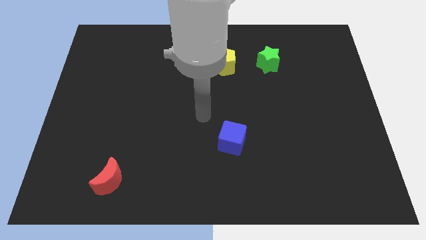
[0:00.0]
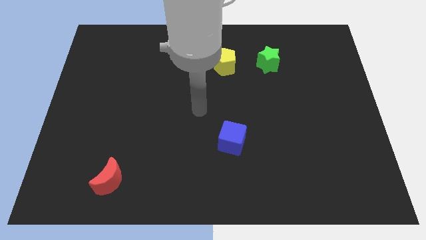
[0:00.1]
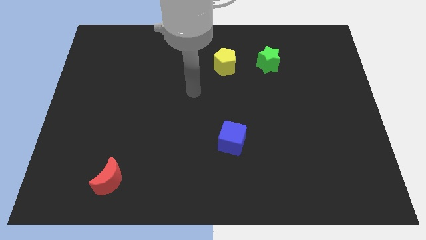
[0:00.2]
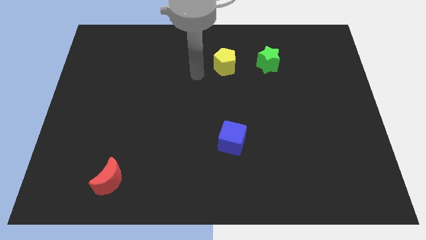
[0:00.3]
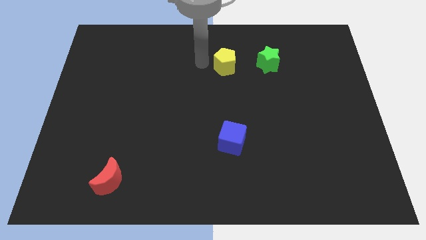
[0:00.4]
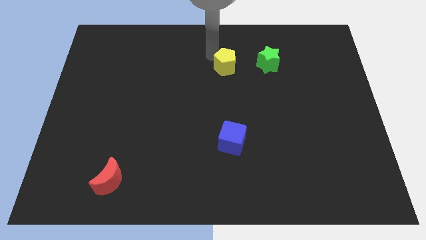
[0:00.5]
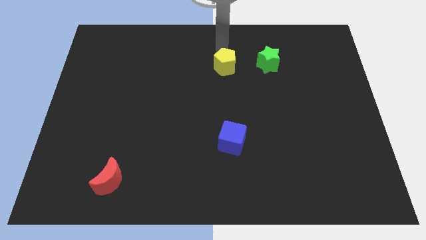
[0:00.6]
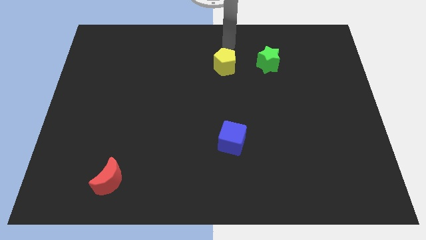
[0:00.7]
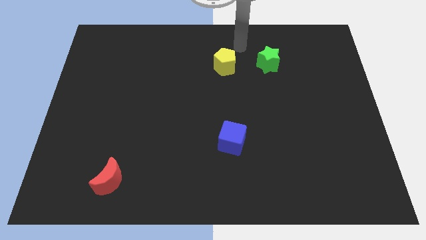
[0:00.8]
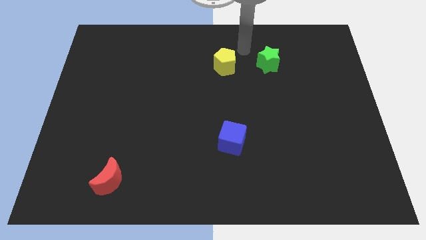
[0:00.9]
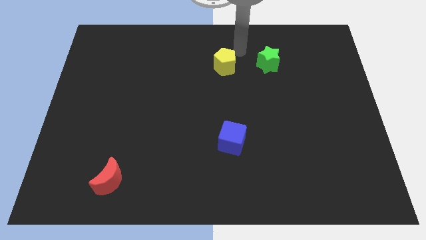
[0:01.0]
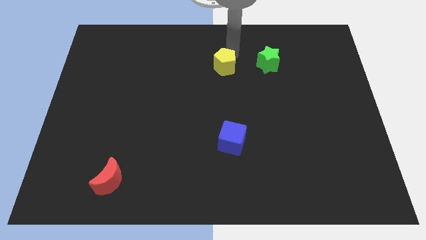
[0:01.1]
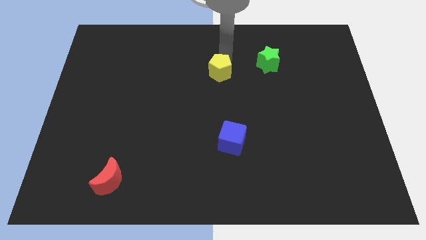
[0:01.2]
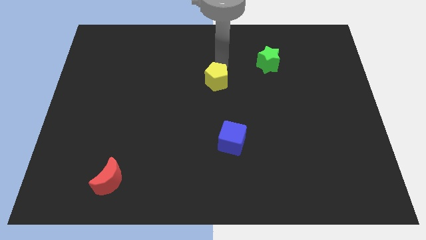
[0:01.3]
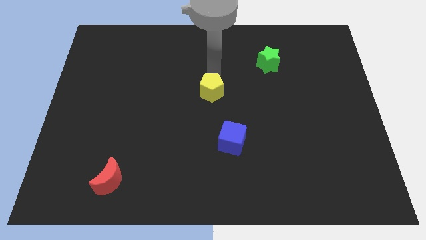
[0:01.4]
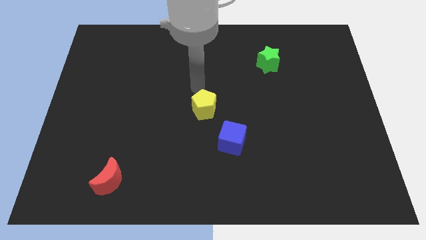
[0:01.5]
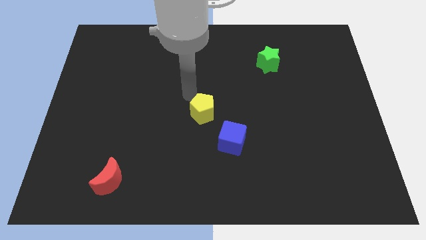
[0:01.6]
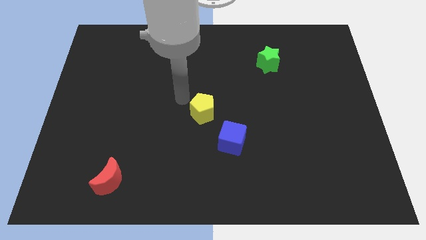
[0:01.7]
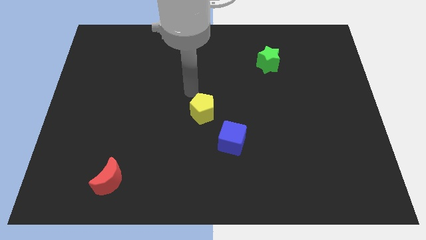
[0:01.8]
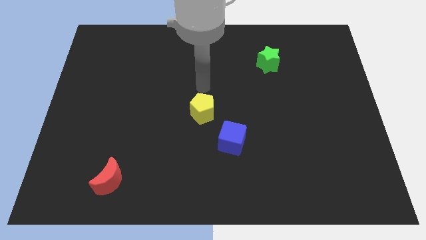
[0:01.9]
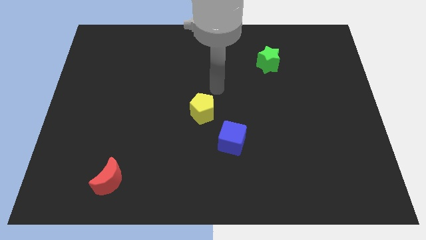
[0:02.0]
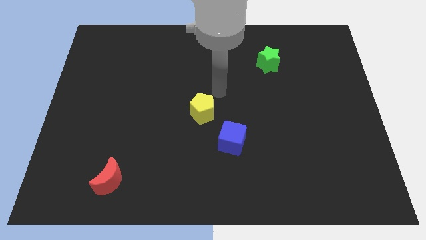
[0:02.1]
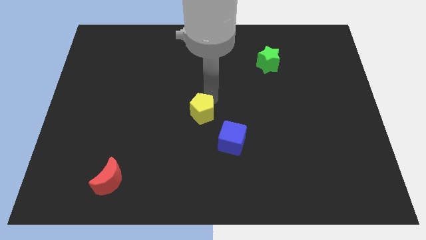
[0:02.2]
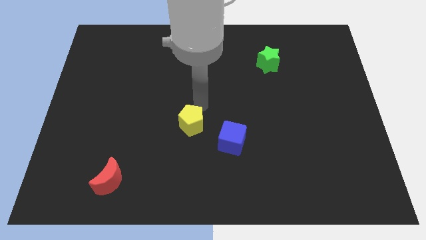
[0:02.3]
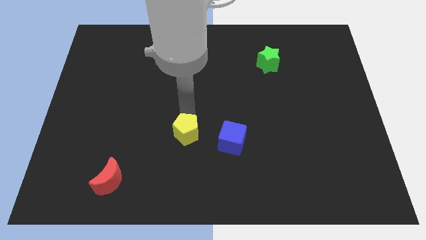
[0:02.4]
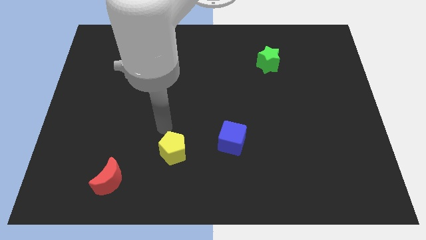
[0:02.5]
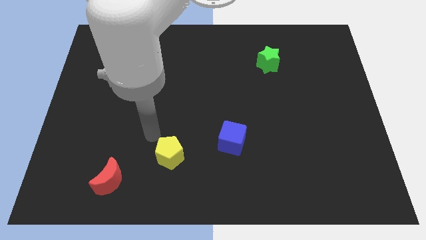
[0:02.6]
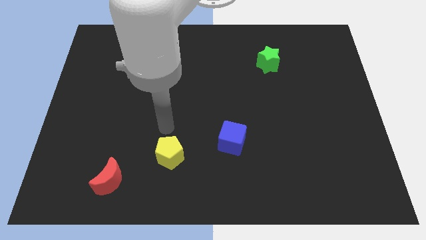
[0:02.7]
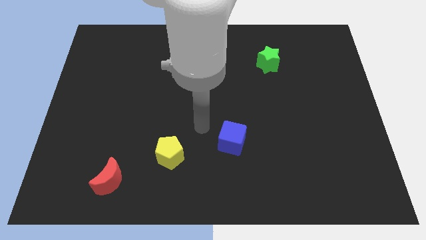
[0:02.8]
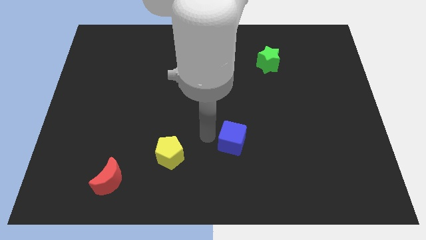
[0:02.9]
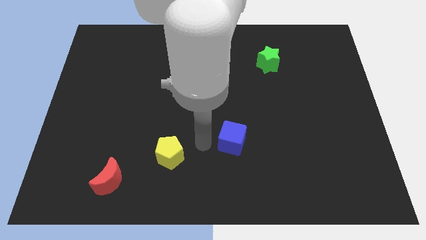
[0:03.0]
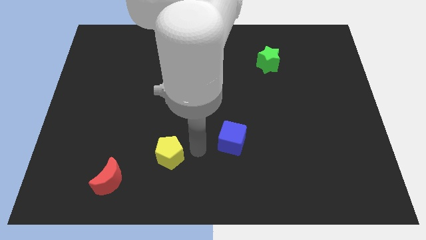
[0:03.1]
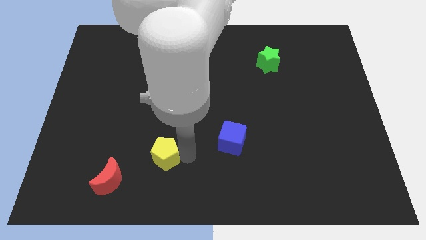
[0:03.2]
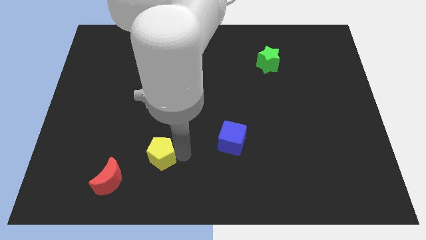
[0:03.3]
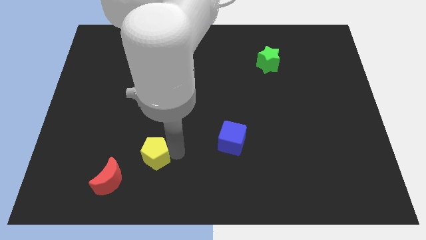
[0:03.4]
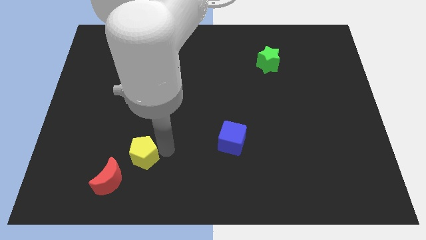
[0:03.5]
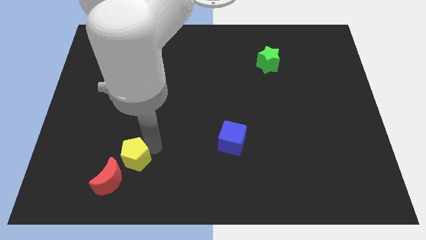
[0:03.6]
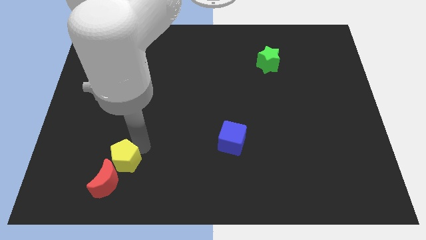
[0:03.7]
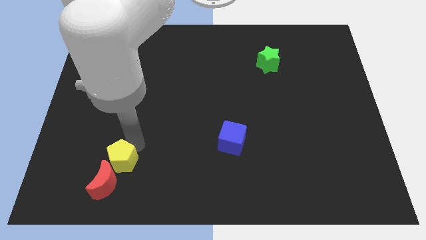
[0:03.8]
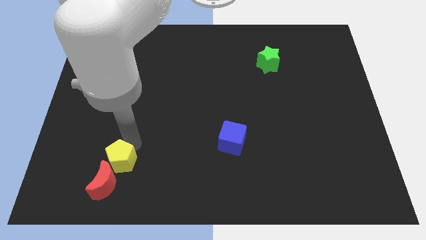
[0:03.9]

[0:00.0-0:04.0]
move the pentagon next to the red moon

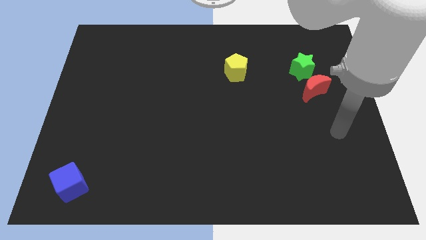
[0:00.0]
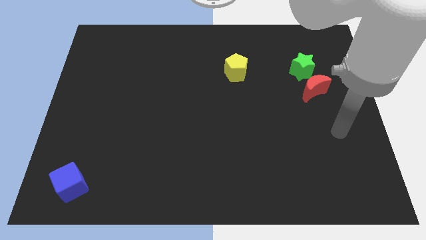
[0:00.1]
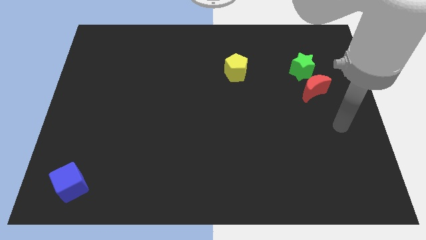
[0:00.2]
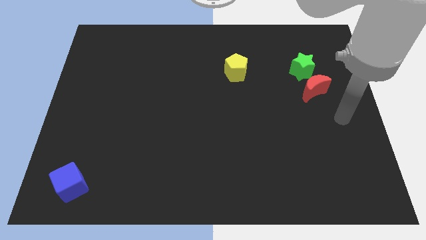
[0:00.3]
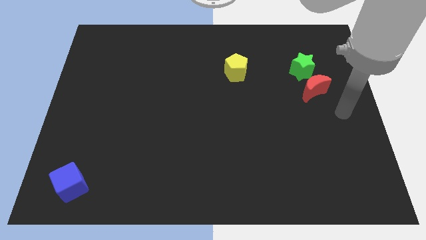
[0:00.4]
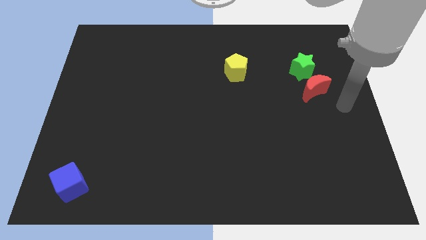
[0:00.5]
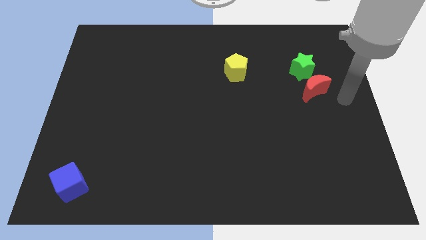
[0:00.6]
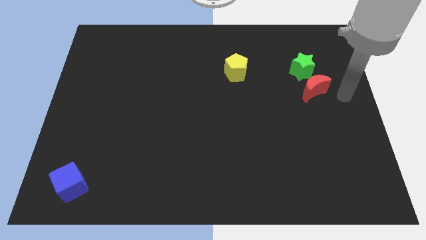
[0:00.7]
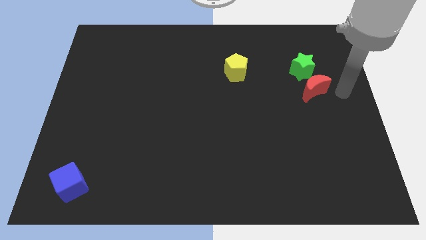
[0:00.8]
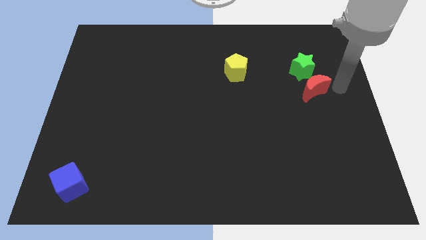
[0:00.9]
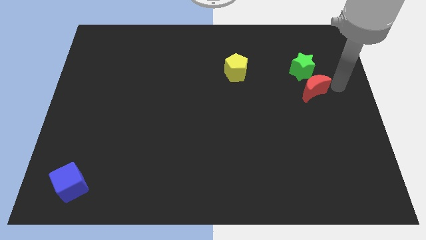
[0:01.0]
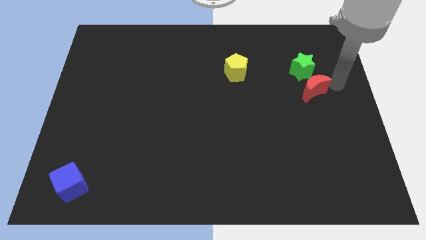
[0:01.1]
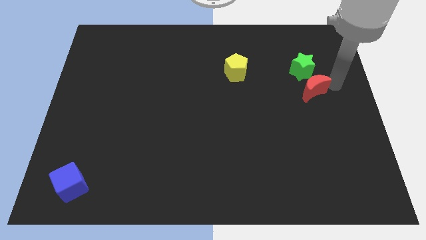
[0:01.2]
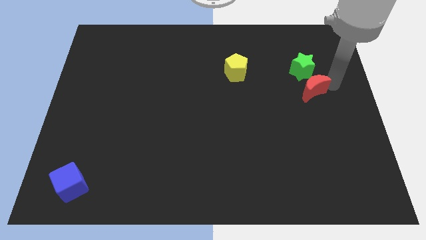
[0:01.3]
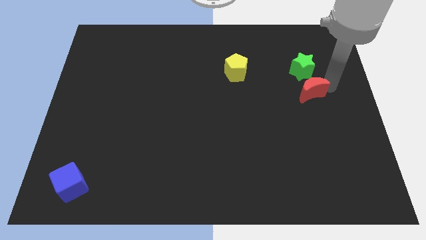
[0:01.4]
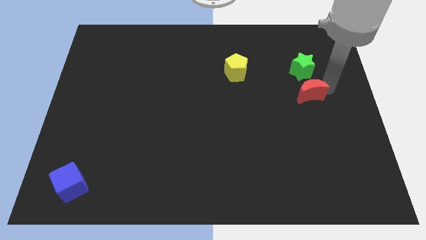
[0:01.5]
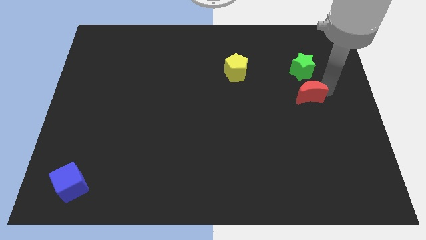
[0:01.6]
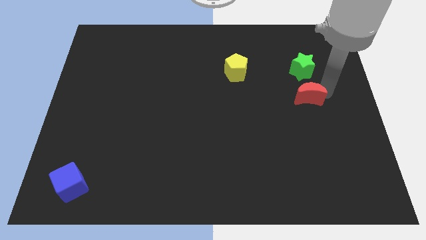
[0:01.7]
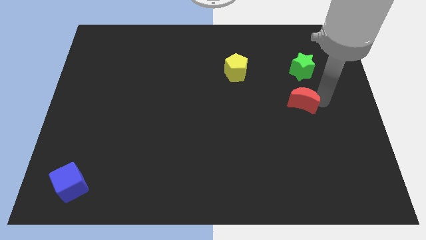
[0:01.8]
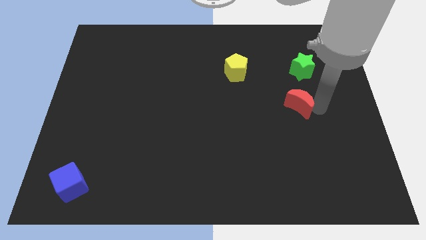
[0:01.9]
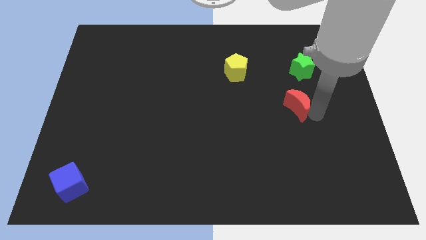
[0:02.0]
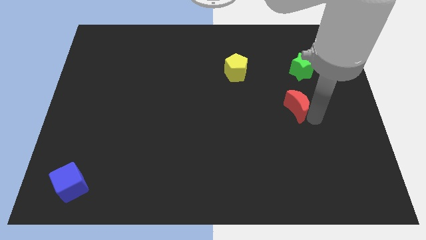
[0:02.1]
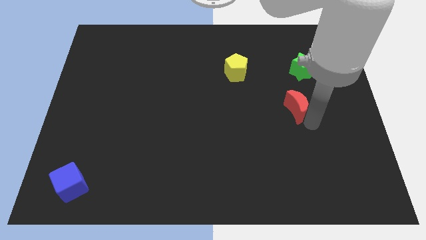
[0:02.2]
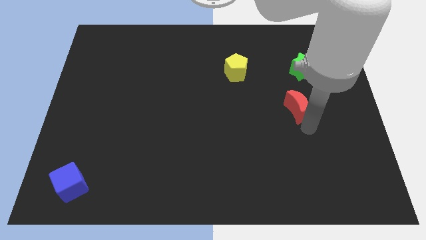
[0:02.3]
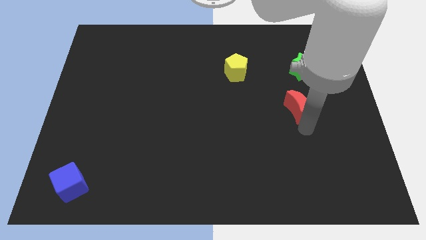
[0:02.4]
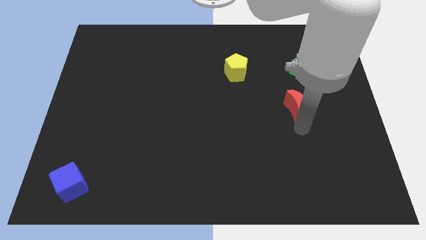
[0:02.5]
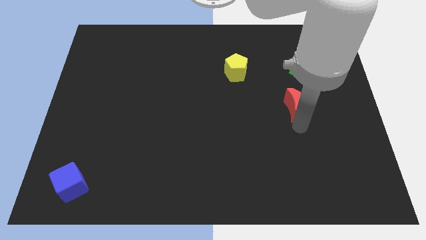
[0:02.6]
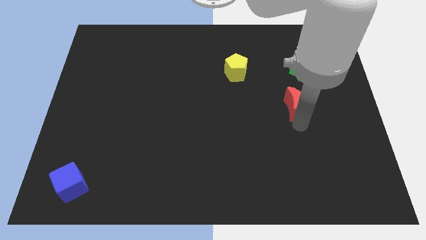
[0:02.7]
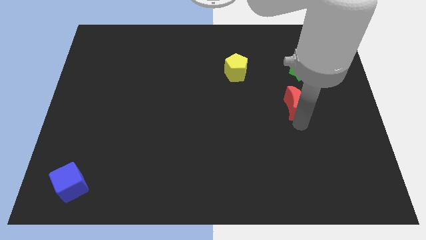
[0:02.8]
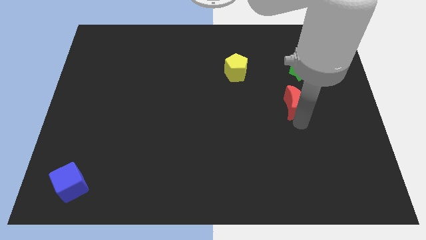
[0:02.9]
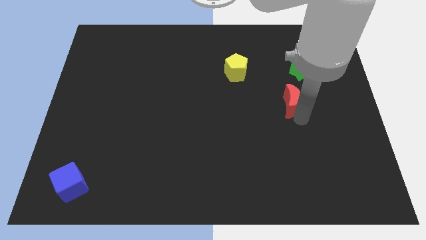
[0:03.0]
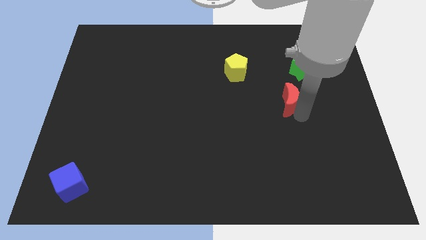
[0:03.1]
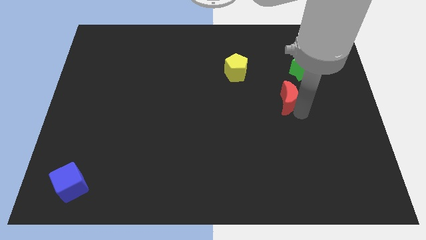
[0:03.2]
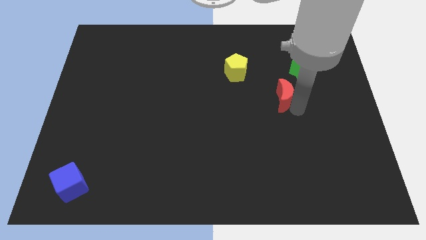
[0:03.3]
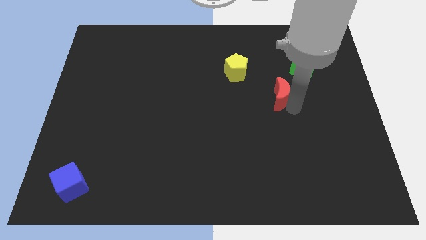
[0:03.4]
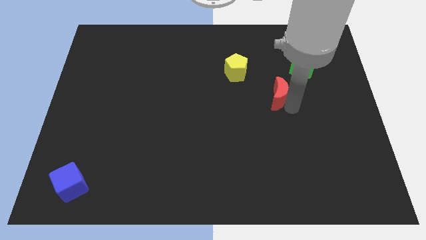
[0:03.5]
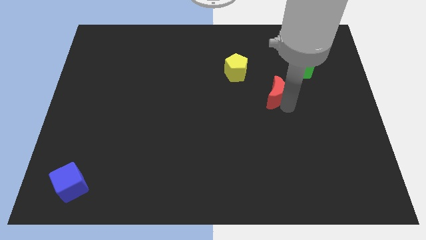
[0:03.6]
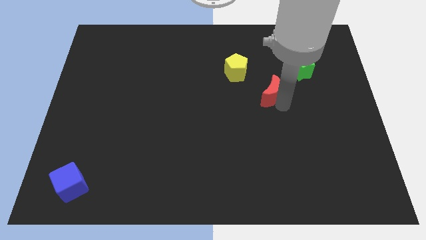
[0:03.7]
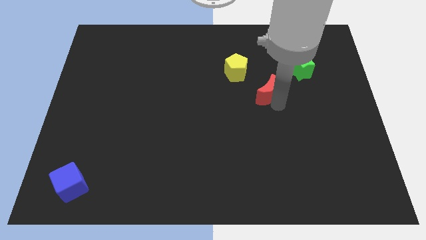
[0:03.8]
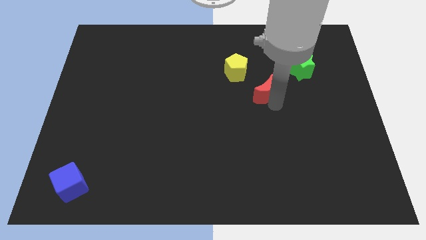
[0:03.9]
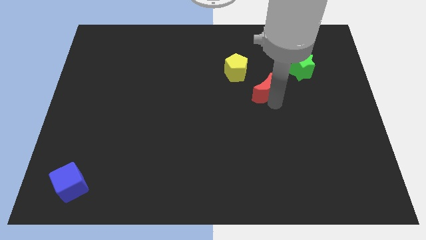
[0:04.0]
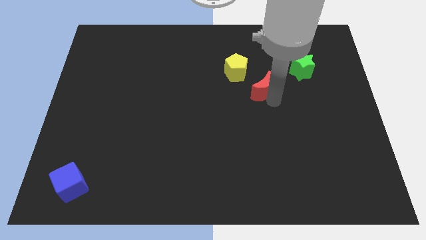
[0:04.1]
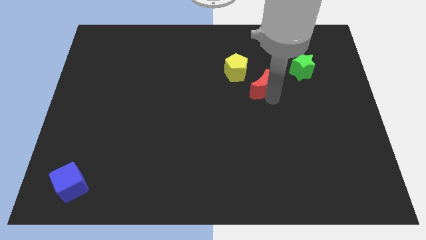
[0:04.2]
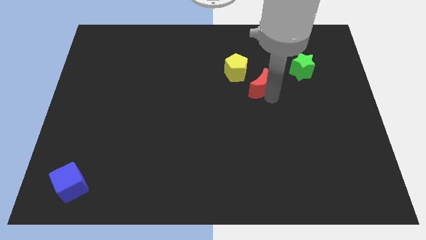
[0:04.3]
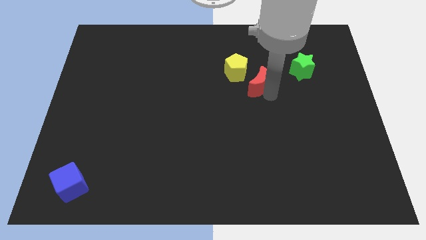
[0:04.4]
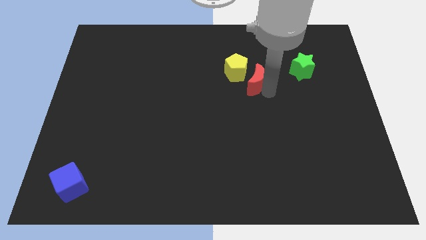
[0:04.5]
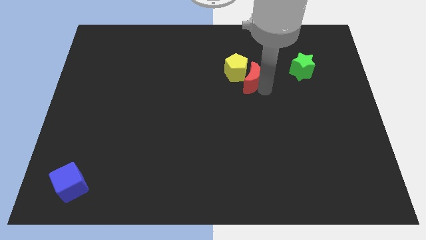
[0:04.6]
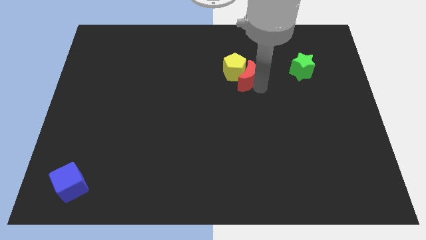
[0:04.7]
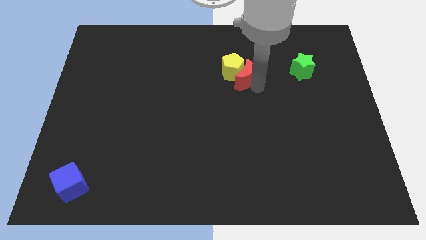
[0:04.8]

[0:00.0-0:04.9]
put the moon towards the yellow block
